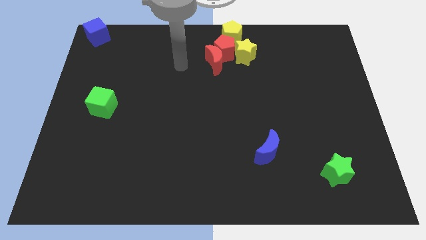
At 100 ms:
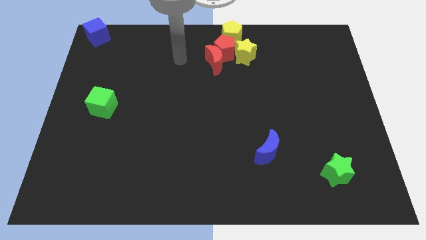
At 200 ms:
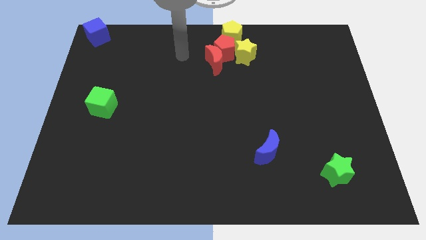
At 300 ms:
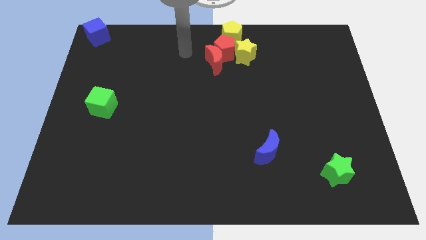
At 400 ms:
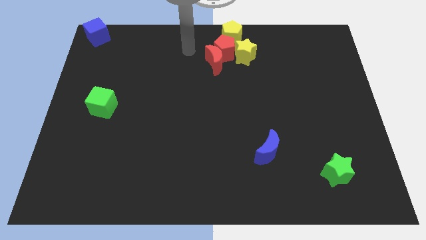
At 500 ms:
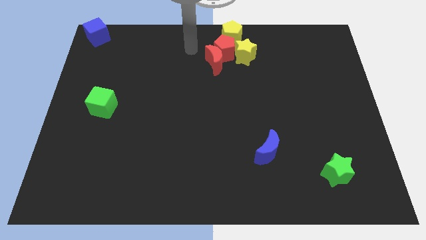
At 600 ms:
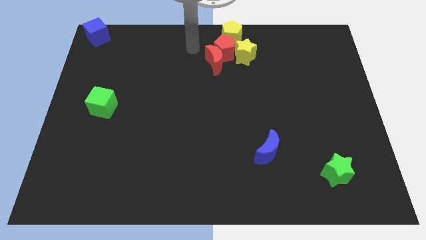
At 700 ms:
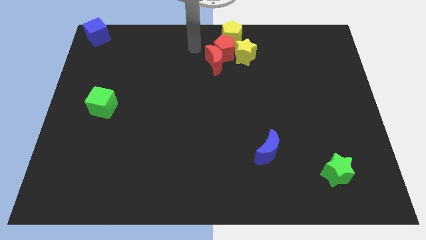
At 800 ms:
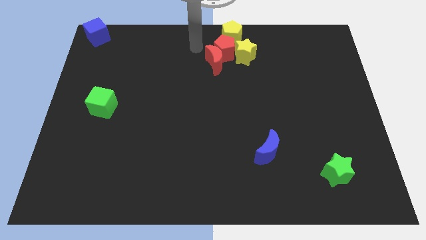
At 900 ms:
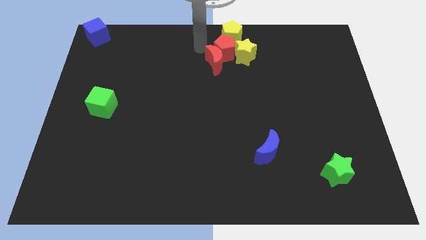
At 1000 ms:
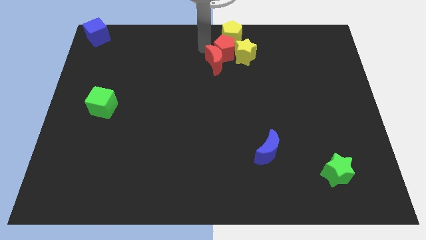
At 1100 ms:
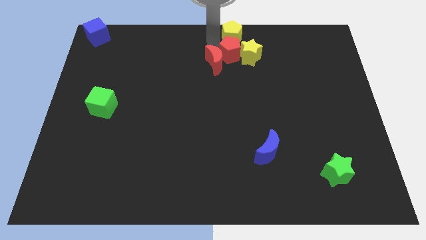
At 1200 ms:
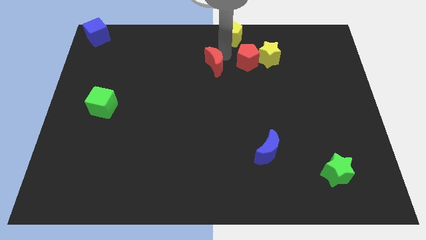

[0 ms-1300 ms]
push the red pentagon into the yellow star

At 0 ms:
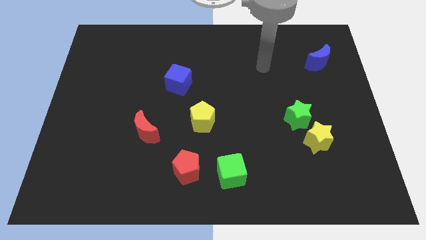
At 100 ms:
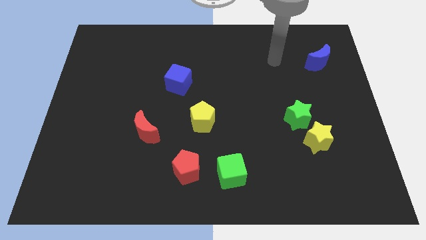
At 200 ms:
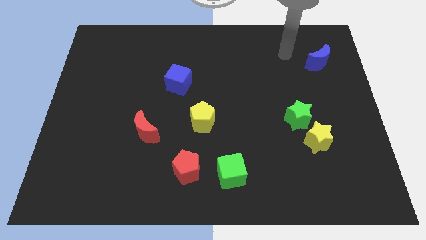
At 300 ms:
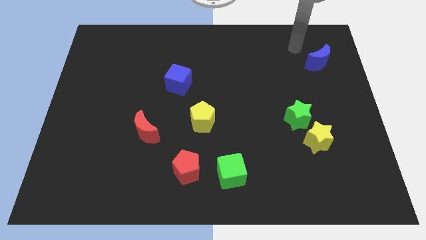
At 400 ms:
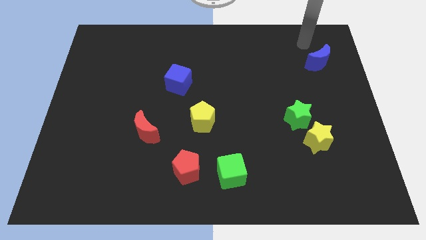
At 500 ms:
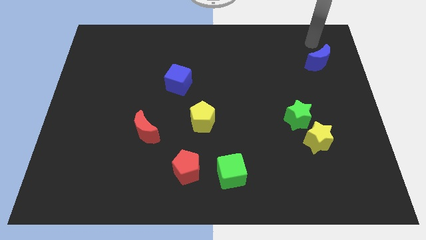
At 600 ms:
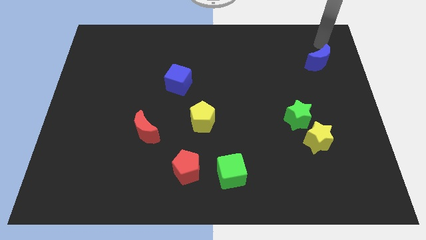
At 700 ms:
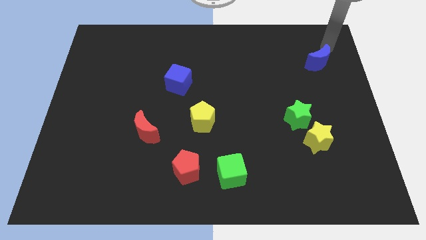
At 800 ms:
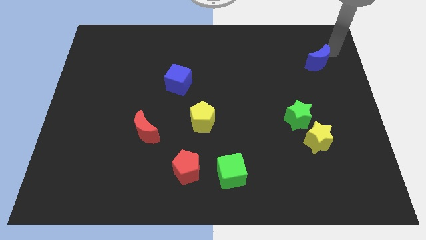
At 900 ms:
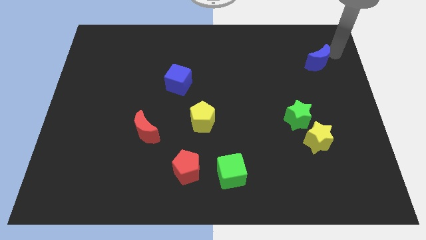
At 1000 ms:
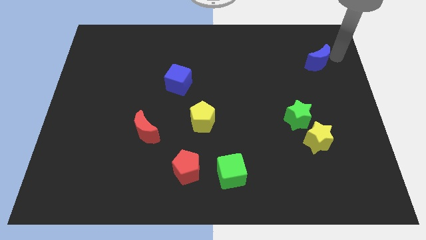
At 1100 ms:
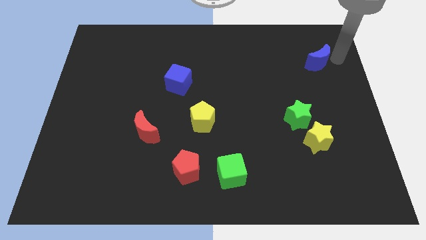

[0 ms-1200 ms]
move your arm right to the blue moon

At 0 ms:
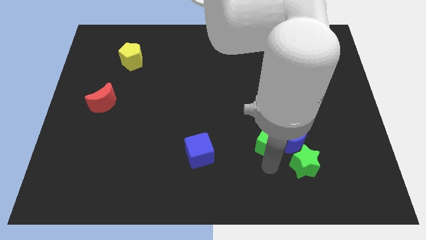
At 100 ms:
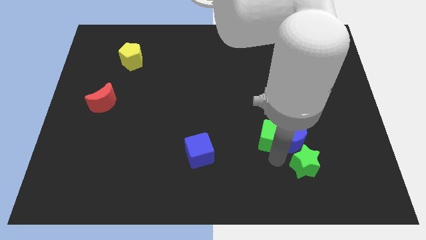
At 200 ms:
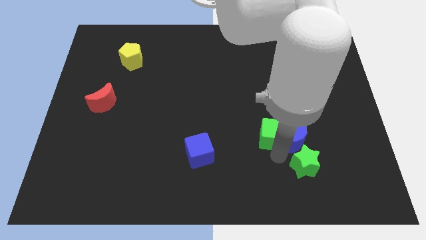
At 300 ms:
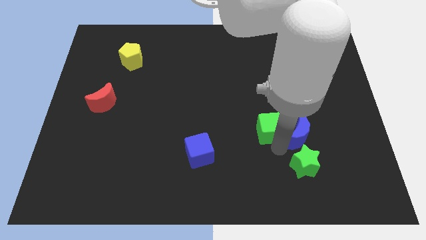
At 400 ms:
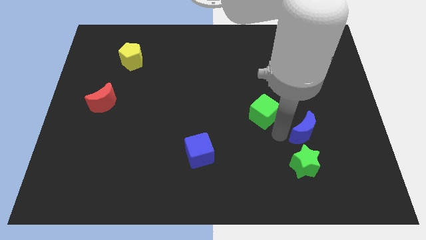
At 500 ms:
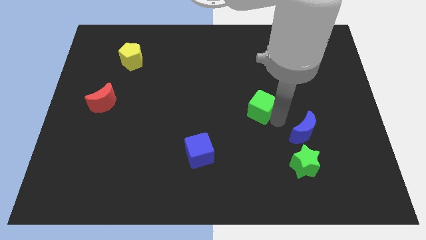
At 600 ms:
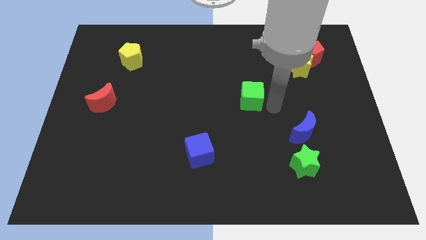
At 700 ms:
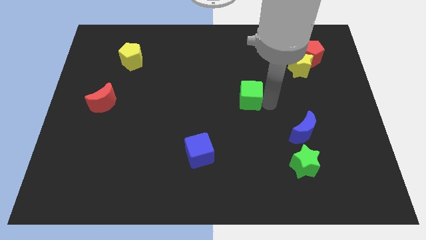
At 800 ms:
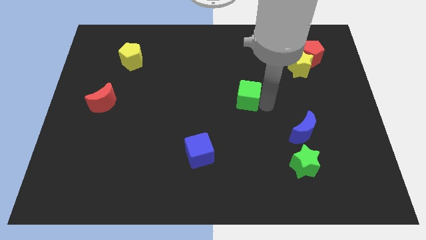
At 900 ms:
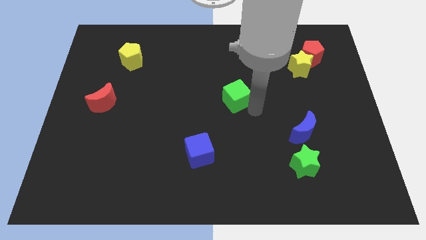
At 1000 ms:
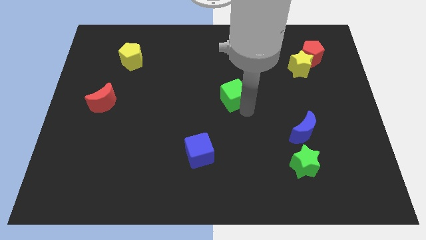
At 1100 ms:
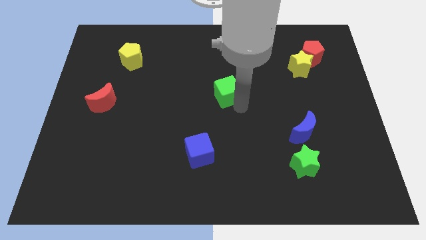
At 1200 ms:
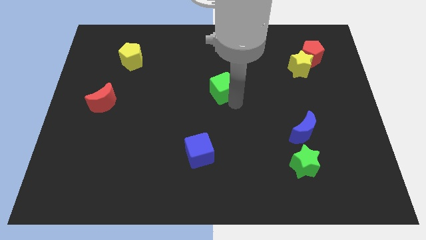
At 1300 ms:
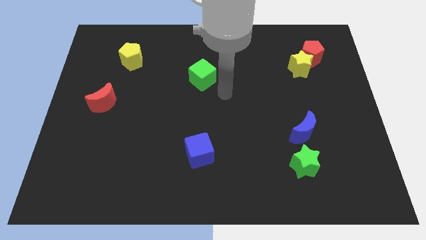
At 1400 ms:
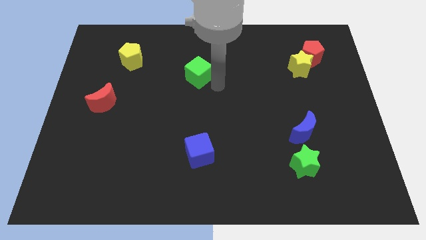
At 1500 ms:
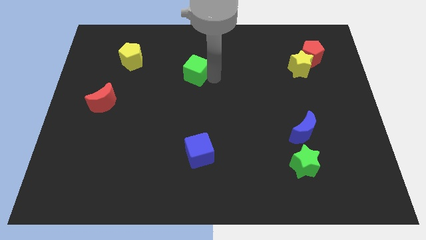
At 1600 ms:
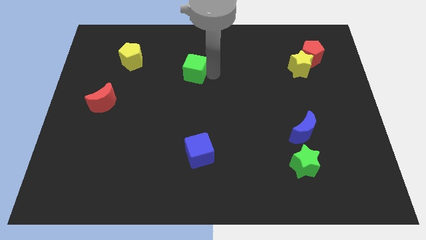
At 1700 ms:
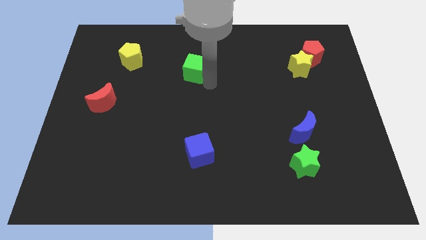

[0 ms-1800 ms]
move the green cube on top of blue cube

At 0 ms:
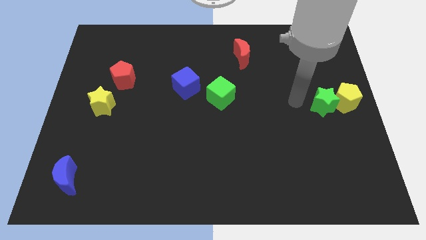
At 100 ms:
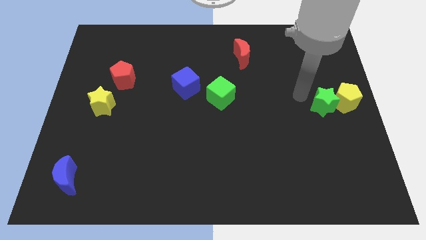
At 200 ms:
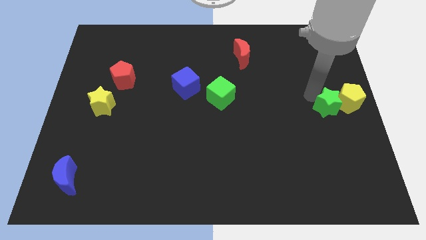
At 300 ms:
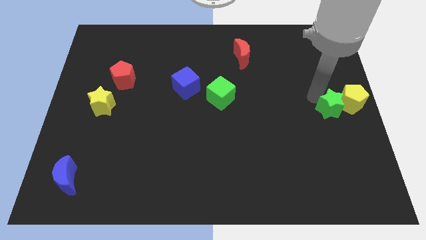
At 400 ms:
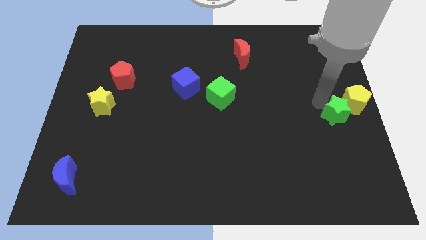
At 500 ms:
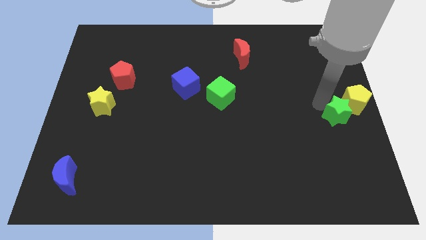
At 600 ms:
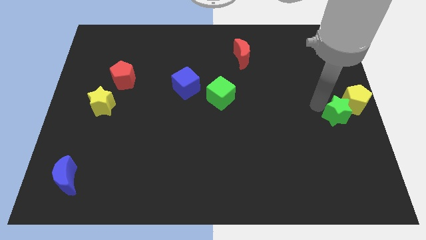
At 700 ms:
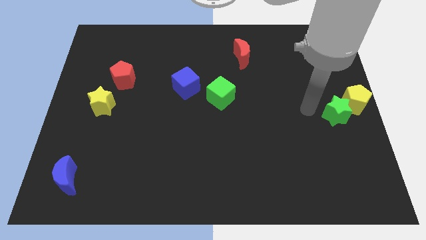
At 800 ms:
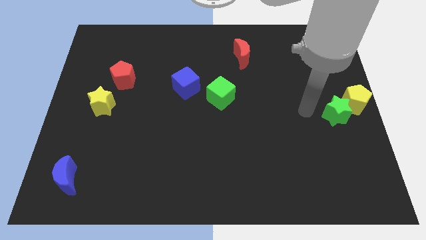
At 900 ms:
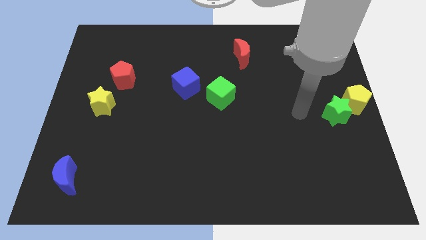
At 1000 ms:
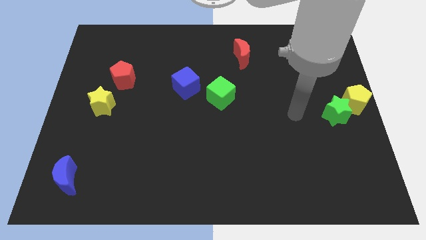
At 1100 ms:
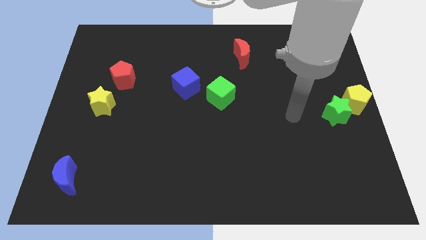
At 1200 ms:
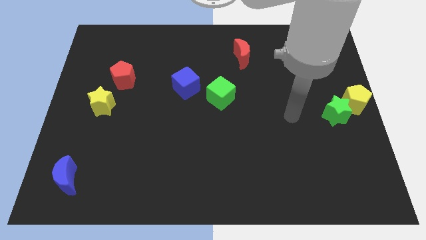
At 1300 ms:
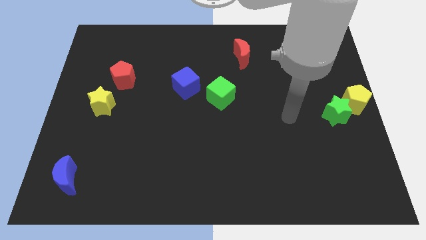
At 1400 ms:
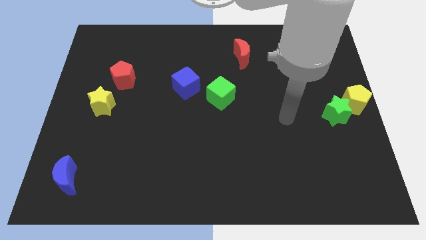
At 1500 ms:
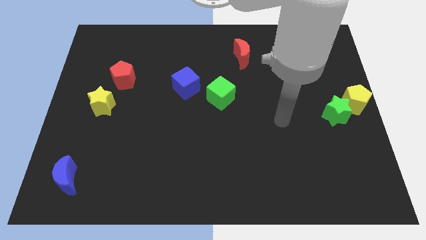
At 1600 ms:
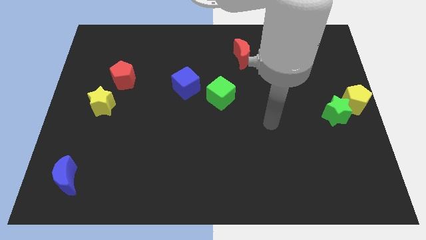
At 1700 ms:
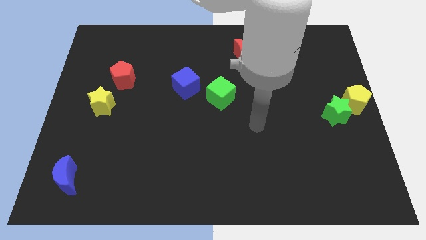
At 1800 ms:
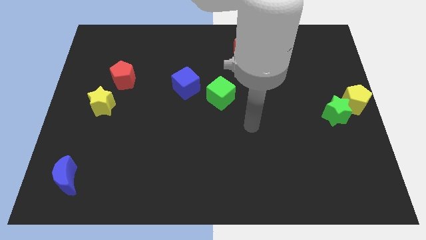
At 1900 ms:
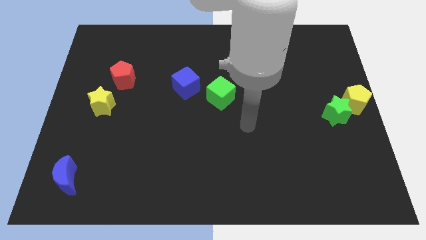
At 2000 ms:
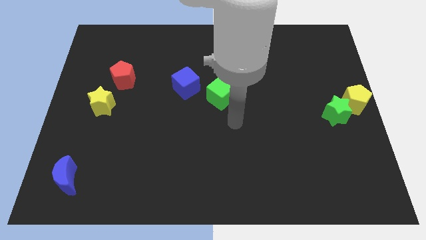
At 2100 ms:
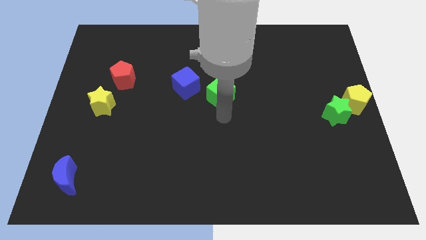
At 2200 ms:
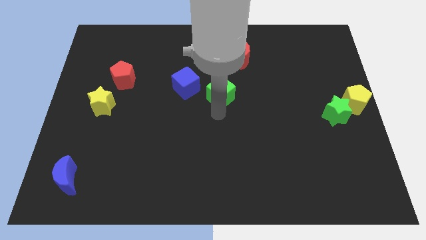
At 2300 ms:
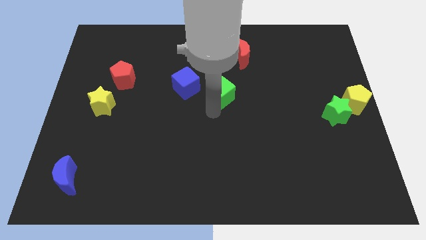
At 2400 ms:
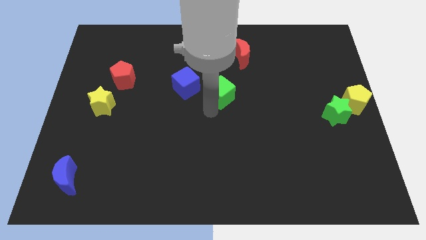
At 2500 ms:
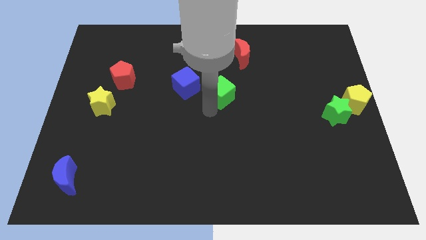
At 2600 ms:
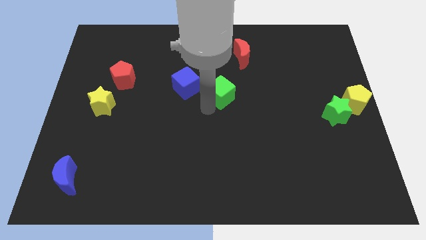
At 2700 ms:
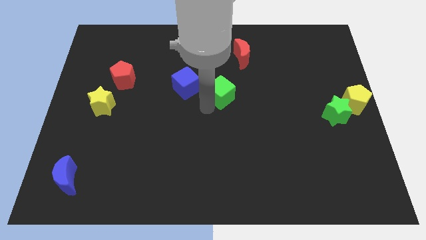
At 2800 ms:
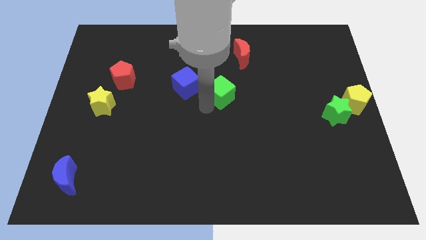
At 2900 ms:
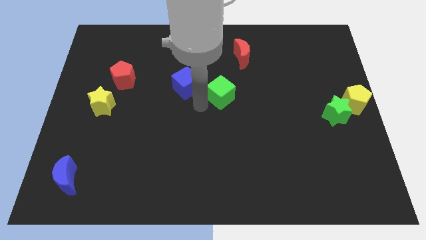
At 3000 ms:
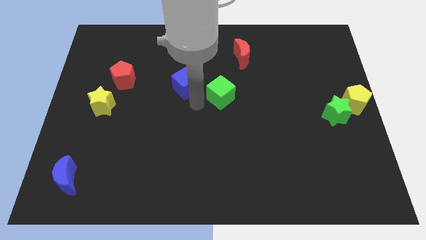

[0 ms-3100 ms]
move the arm to the left of the green cube

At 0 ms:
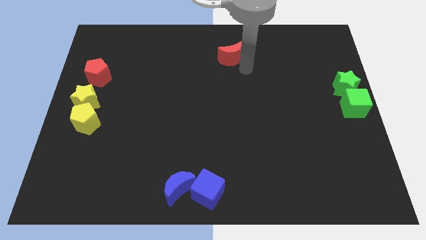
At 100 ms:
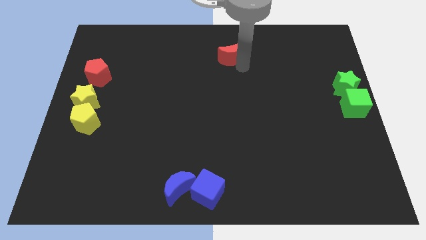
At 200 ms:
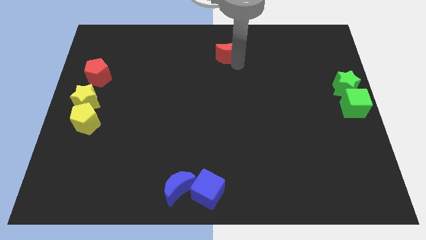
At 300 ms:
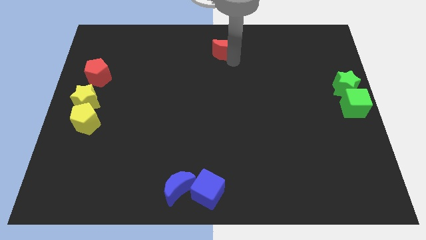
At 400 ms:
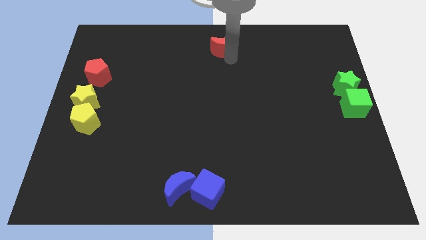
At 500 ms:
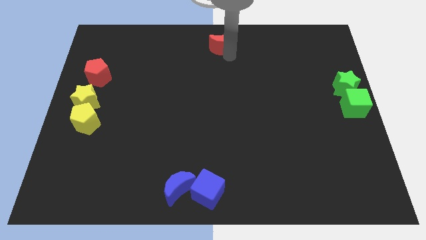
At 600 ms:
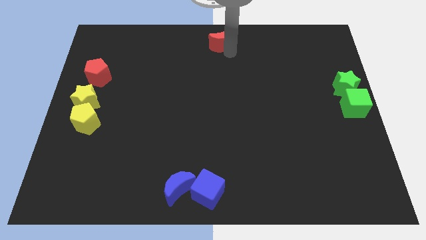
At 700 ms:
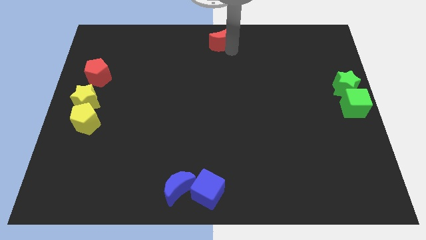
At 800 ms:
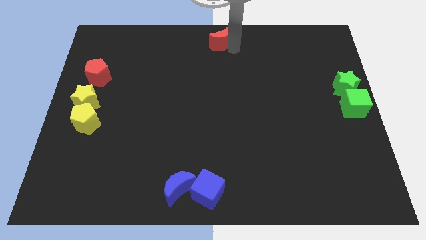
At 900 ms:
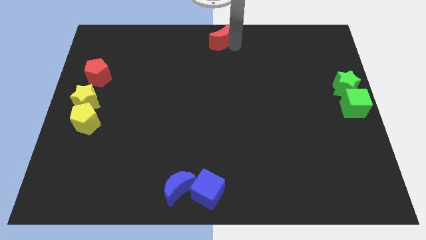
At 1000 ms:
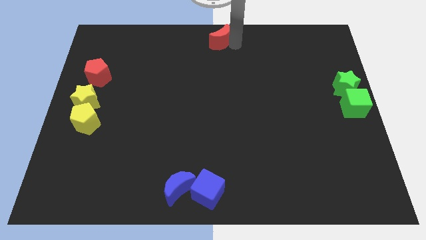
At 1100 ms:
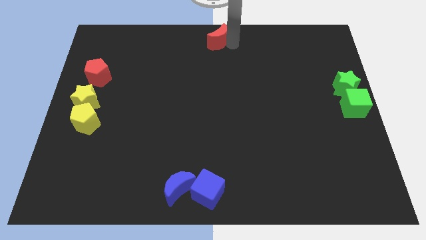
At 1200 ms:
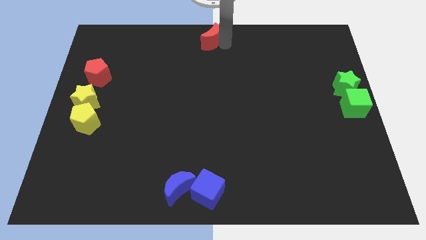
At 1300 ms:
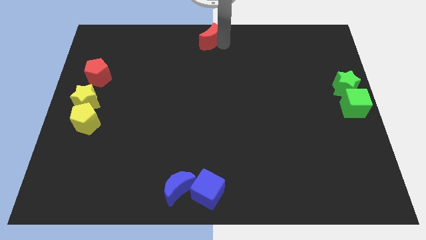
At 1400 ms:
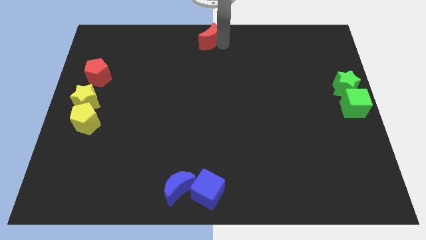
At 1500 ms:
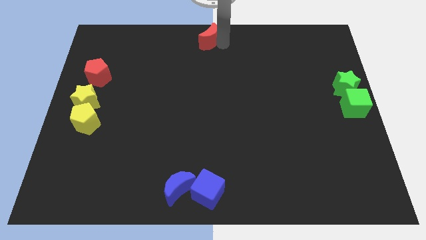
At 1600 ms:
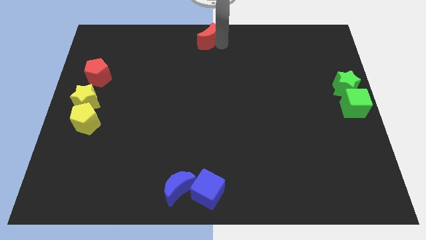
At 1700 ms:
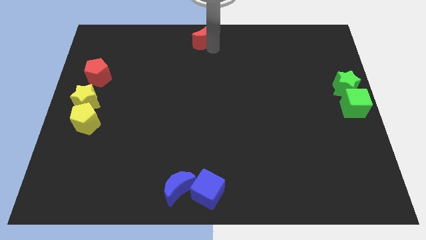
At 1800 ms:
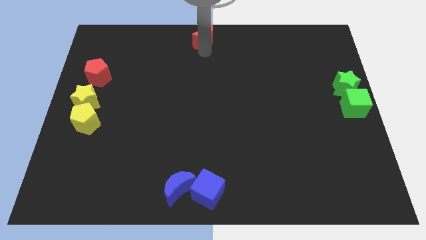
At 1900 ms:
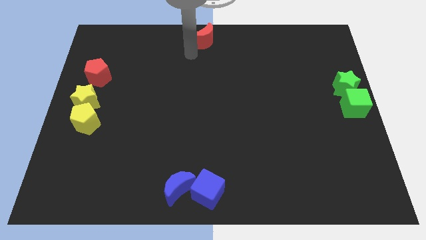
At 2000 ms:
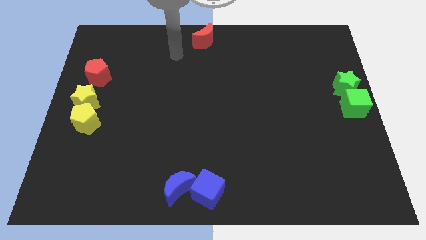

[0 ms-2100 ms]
place the red crescent at the top center of the board
